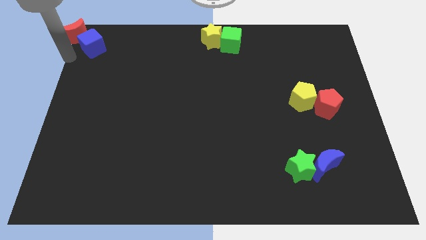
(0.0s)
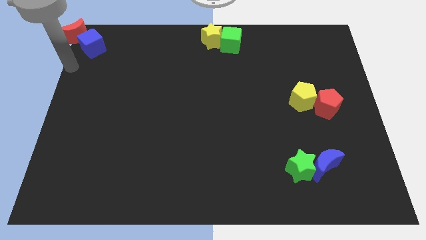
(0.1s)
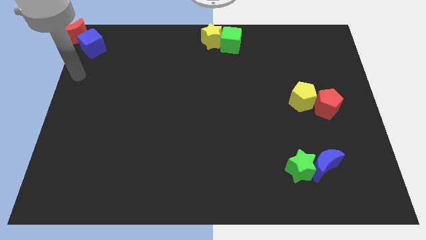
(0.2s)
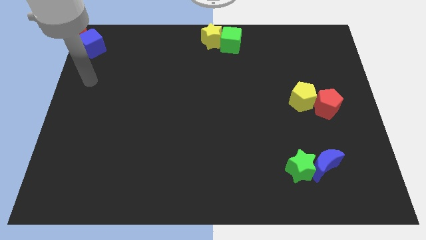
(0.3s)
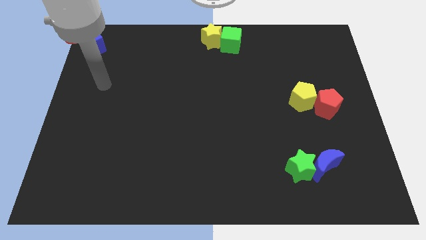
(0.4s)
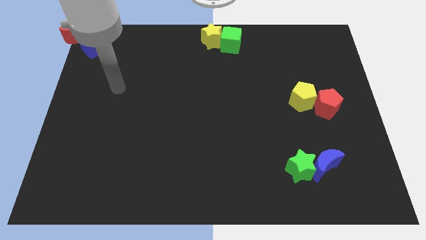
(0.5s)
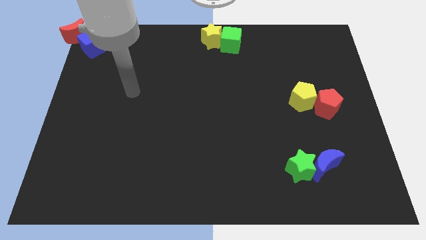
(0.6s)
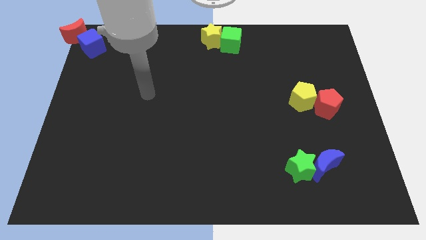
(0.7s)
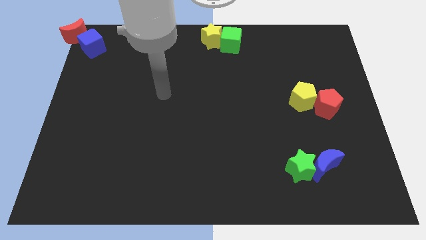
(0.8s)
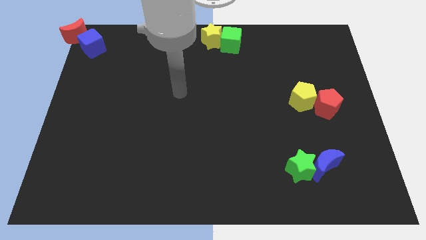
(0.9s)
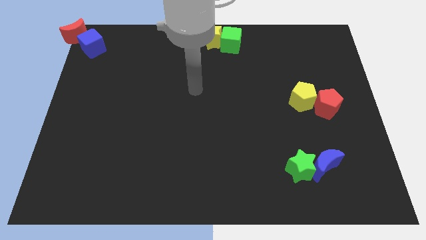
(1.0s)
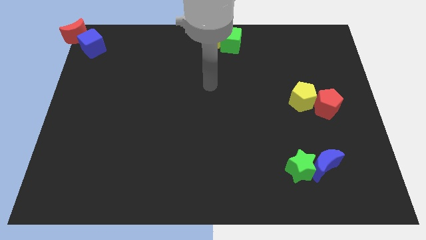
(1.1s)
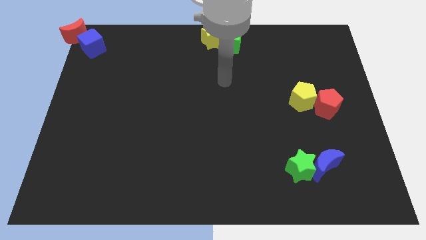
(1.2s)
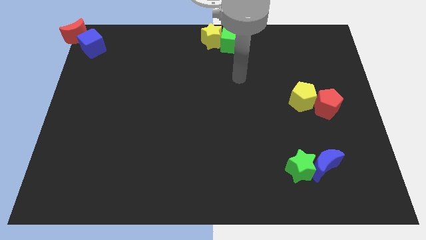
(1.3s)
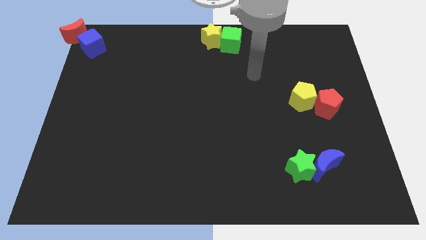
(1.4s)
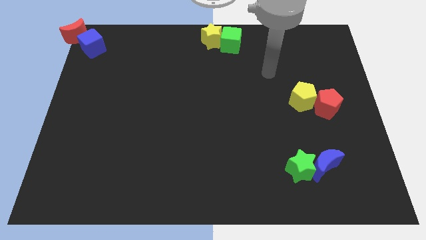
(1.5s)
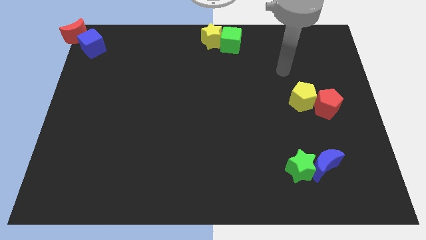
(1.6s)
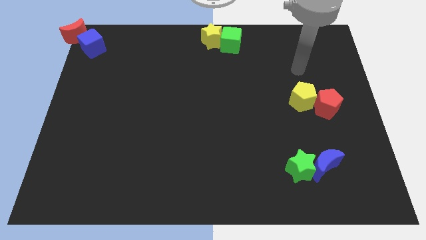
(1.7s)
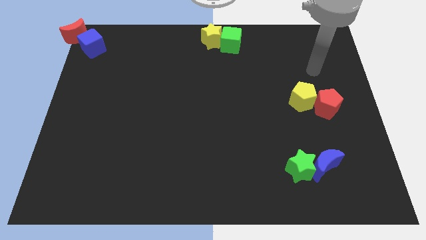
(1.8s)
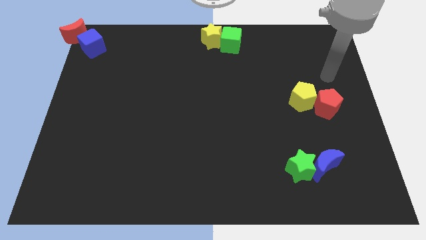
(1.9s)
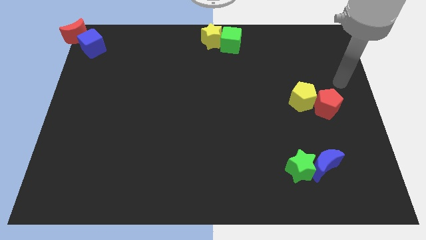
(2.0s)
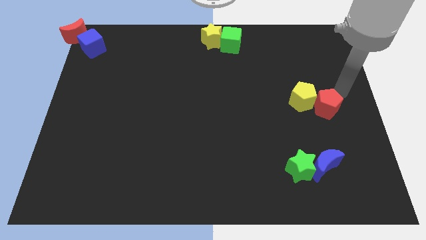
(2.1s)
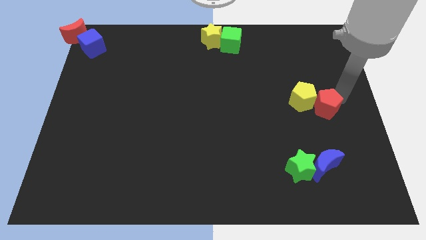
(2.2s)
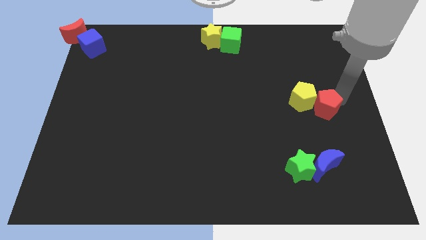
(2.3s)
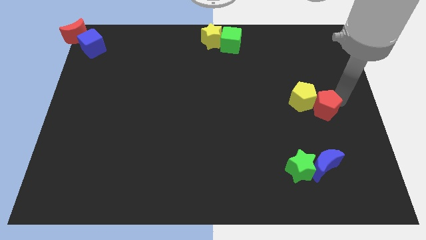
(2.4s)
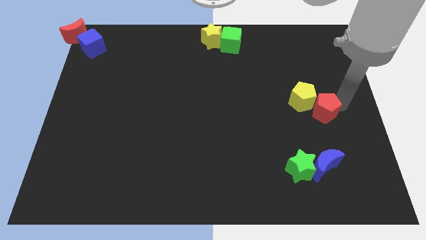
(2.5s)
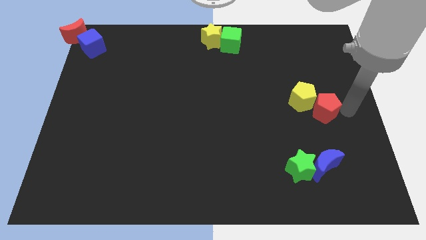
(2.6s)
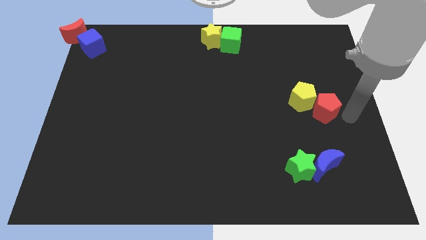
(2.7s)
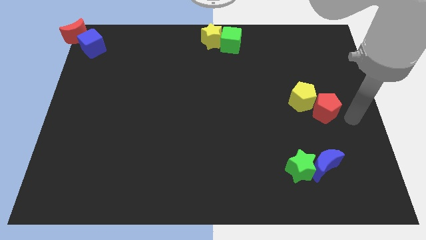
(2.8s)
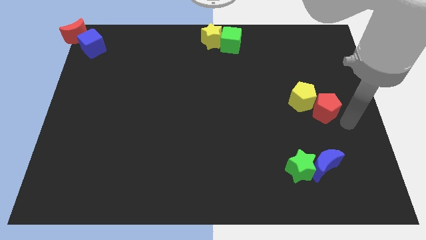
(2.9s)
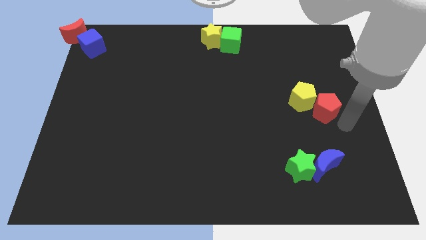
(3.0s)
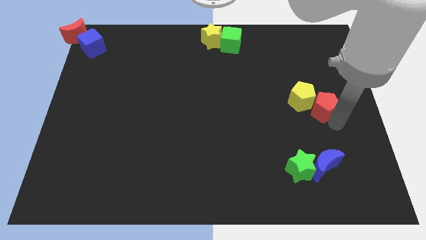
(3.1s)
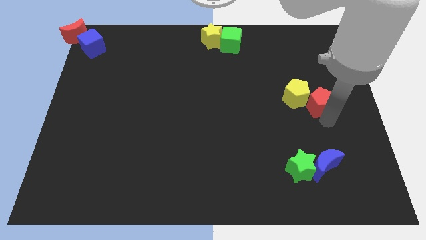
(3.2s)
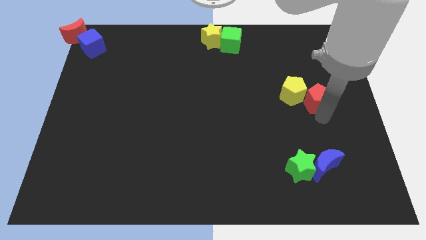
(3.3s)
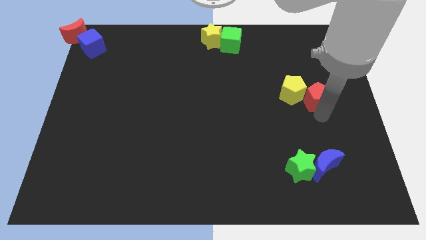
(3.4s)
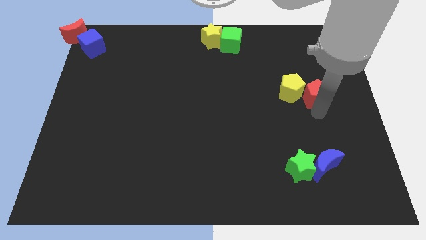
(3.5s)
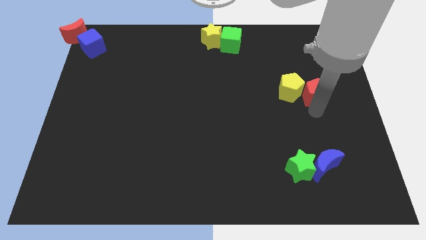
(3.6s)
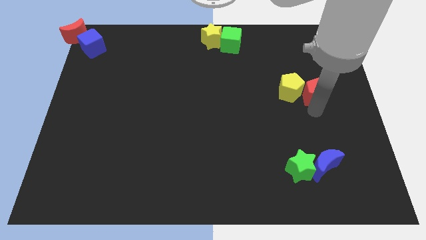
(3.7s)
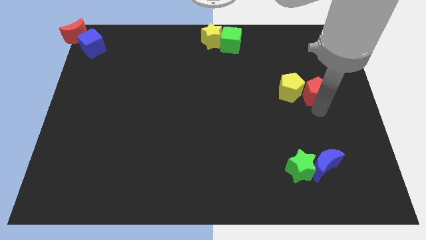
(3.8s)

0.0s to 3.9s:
push the pentagons to the top of the board

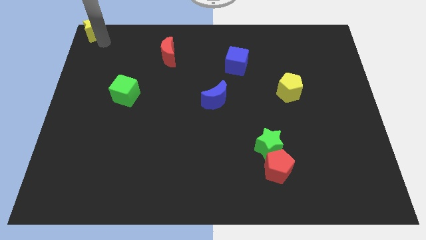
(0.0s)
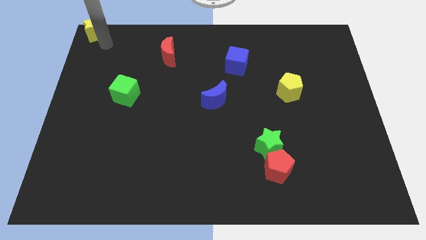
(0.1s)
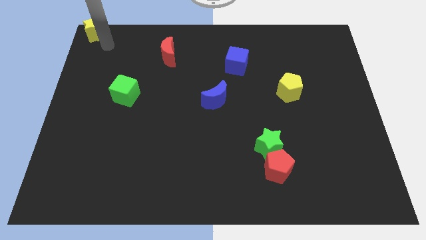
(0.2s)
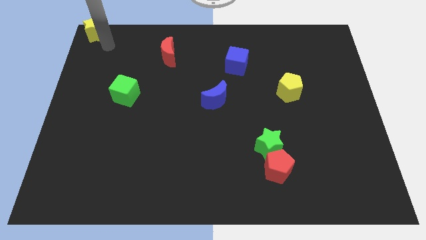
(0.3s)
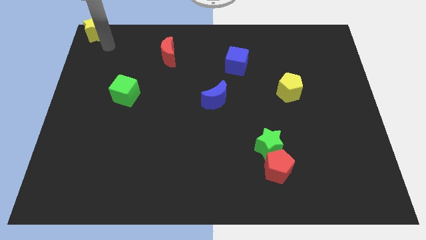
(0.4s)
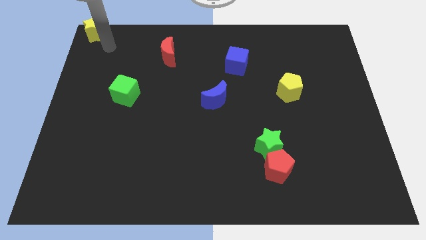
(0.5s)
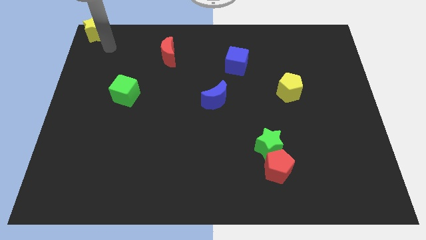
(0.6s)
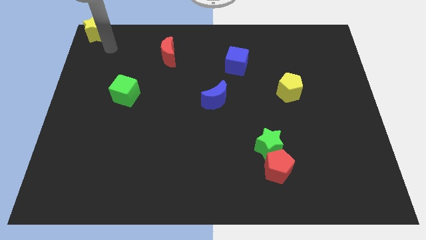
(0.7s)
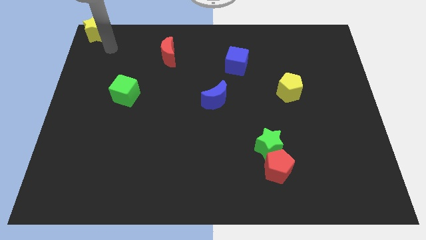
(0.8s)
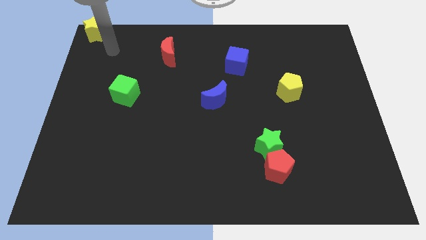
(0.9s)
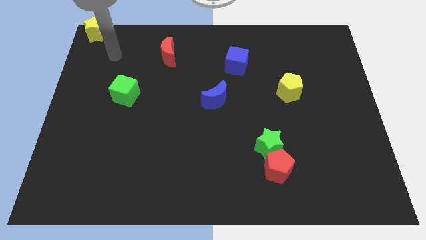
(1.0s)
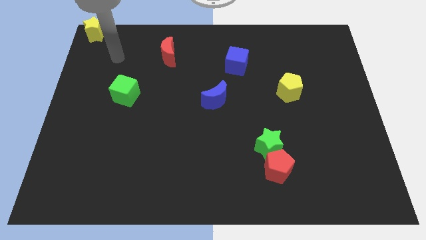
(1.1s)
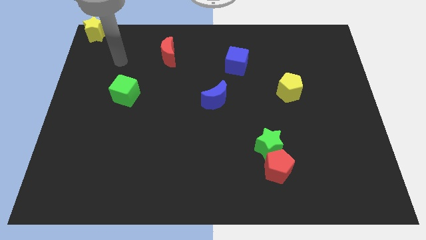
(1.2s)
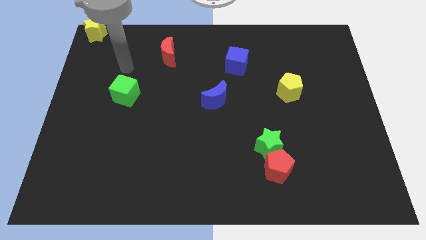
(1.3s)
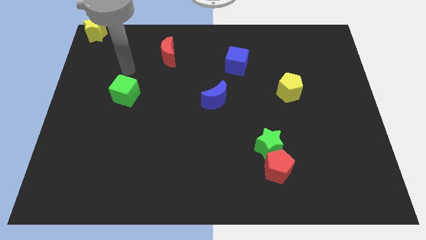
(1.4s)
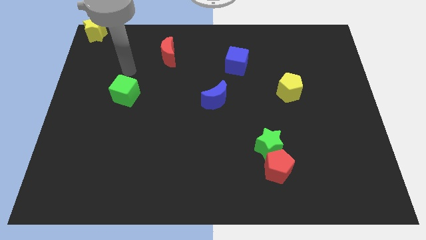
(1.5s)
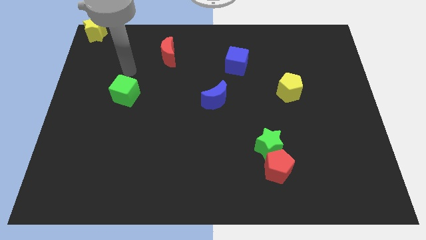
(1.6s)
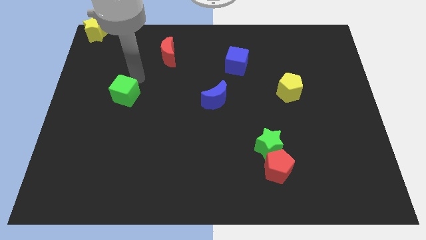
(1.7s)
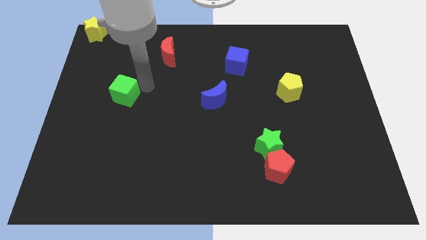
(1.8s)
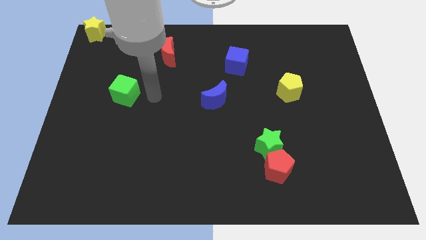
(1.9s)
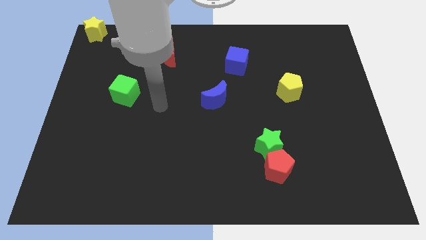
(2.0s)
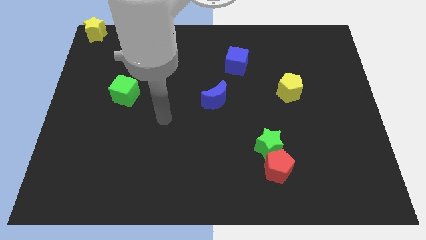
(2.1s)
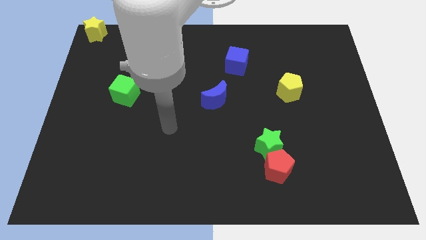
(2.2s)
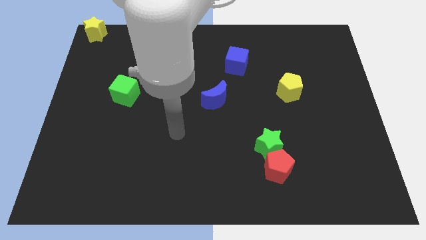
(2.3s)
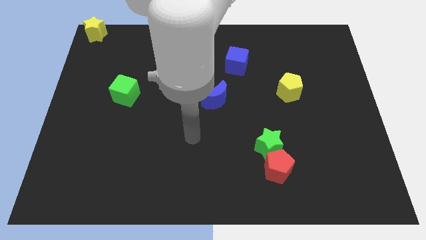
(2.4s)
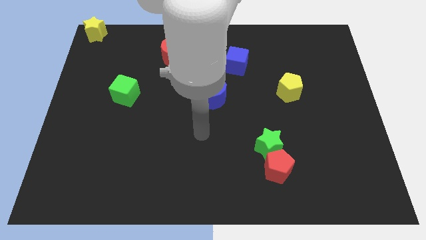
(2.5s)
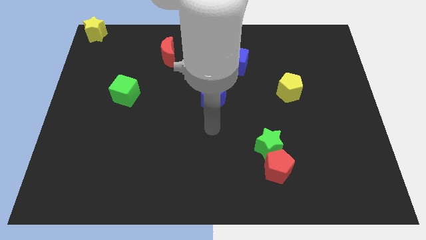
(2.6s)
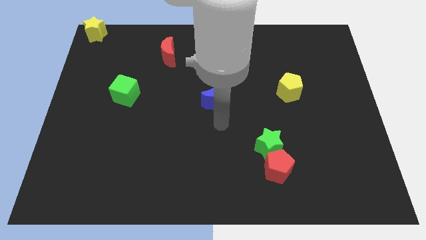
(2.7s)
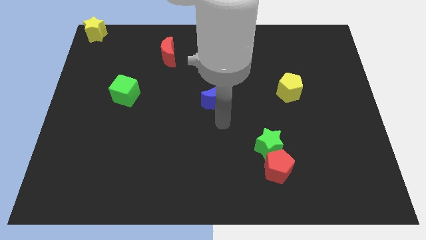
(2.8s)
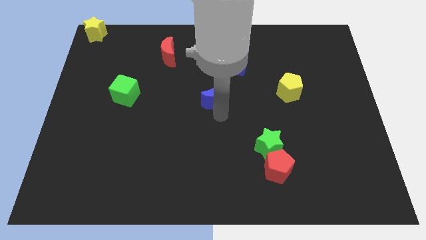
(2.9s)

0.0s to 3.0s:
move your arm away from the yellow star

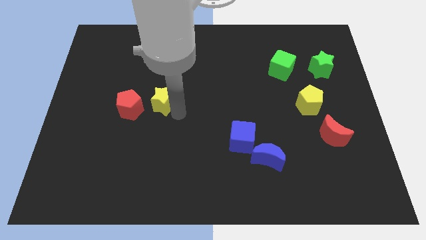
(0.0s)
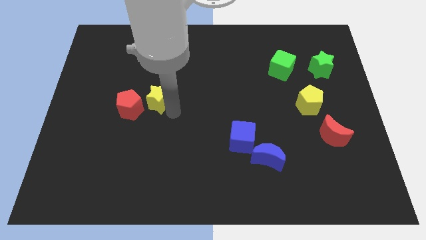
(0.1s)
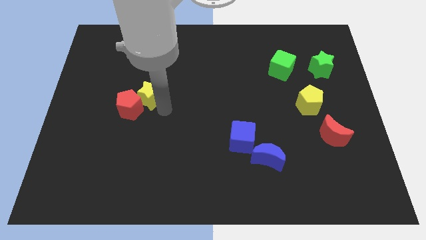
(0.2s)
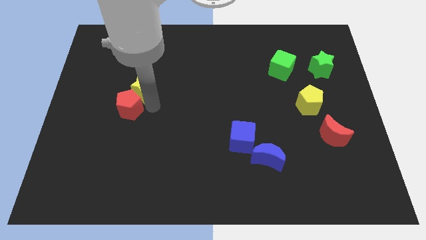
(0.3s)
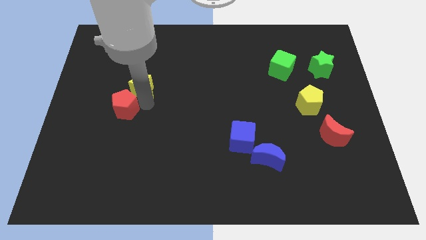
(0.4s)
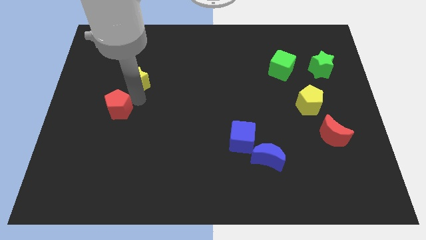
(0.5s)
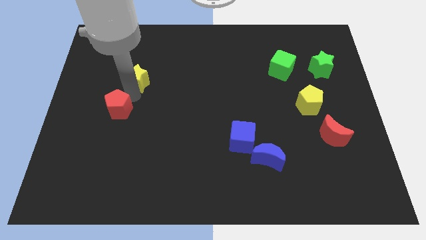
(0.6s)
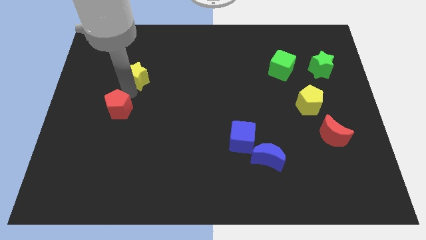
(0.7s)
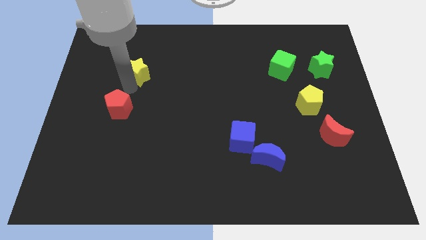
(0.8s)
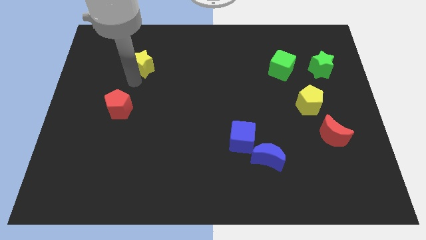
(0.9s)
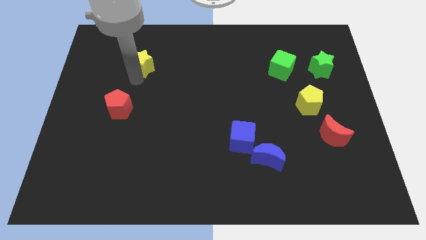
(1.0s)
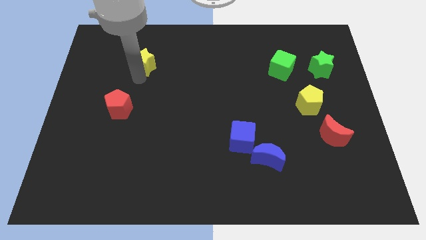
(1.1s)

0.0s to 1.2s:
move the yellow star to the top of the red pentagon

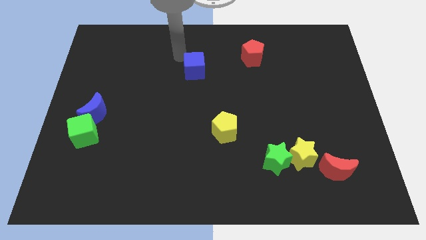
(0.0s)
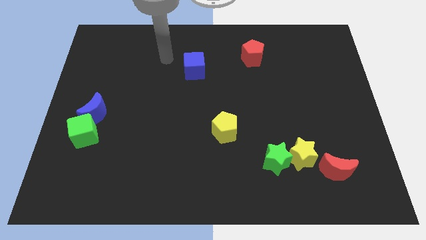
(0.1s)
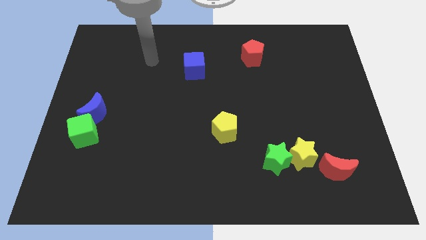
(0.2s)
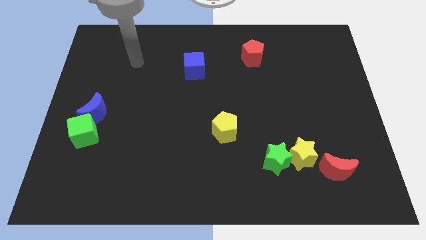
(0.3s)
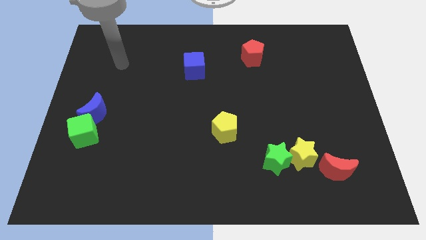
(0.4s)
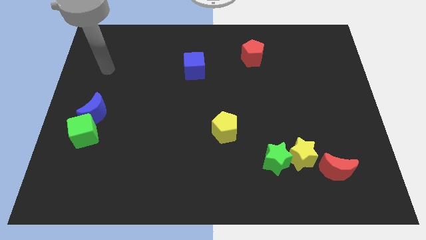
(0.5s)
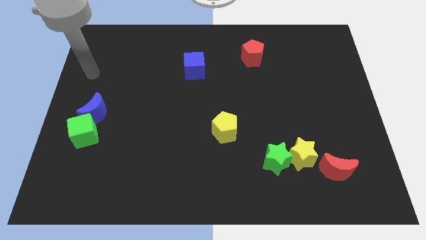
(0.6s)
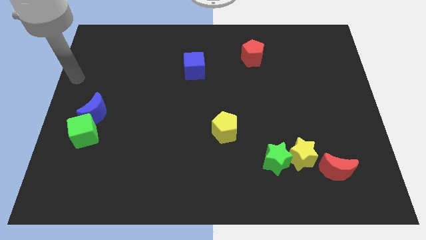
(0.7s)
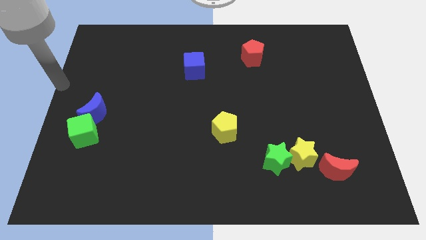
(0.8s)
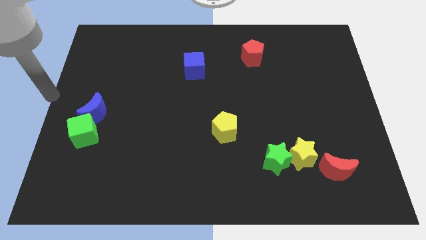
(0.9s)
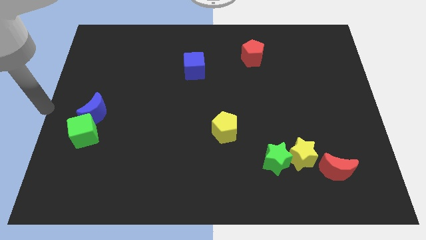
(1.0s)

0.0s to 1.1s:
place your hand at the center left corner
